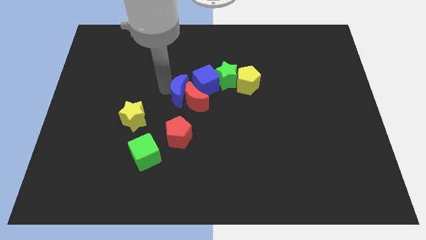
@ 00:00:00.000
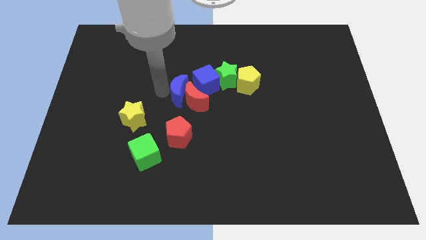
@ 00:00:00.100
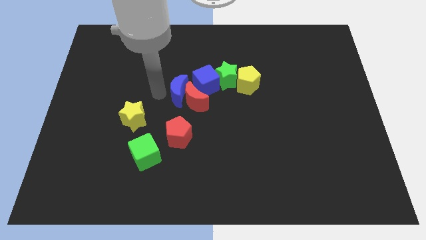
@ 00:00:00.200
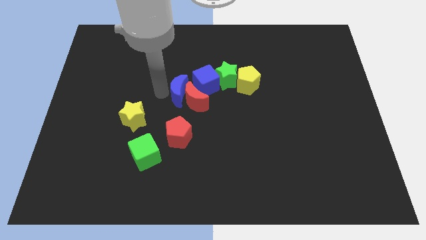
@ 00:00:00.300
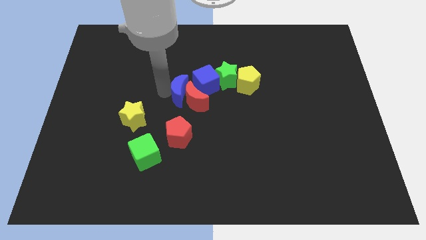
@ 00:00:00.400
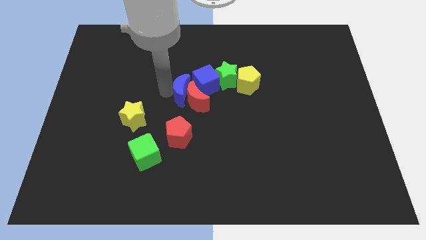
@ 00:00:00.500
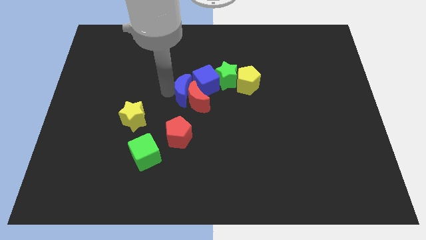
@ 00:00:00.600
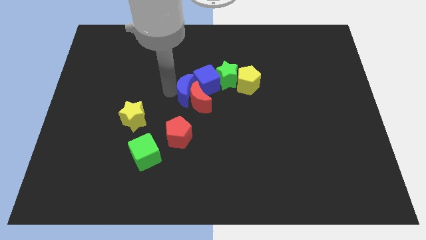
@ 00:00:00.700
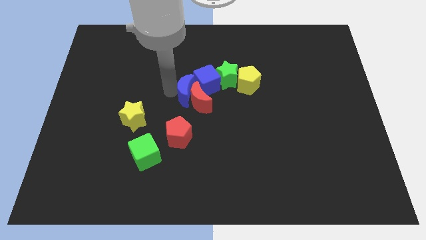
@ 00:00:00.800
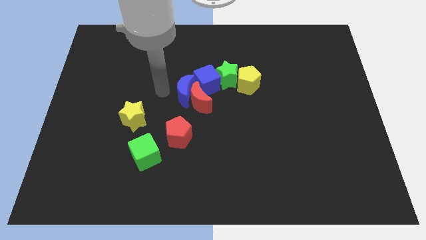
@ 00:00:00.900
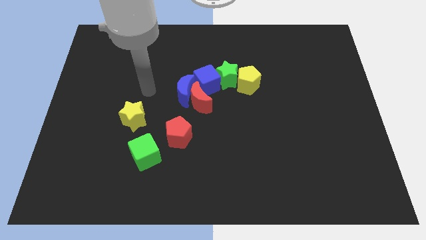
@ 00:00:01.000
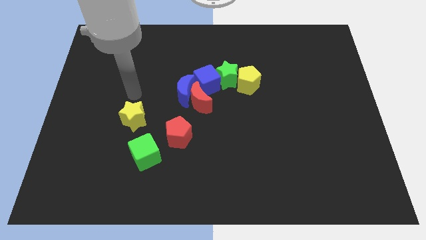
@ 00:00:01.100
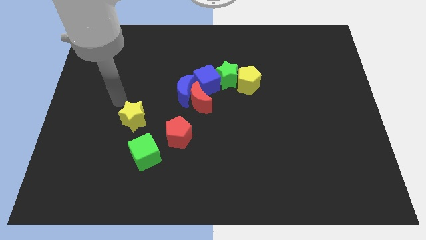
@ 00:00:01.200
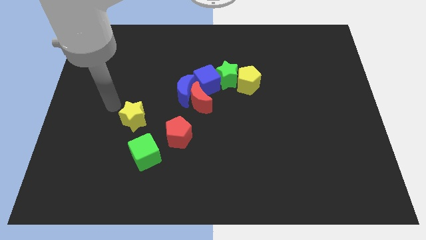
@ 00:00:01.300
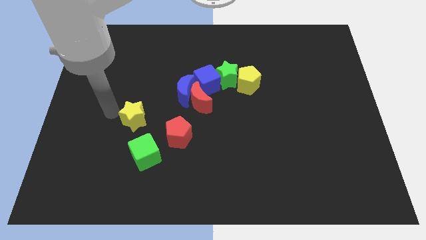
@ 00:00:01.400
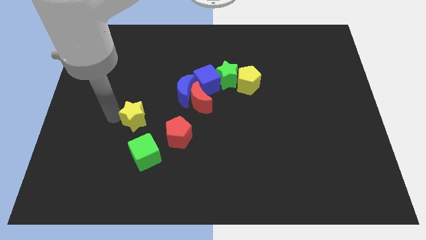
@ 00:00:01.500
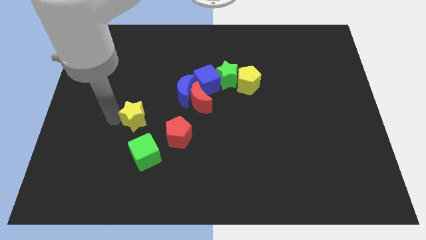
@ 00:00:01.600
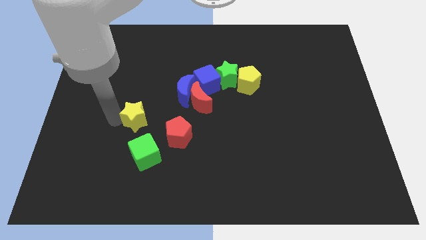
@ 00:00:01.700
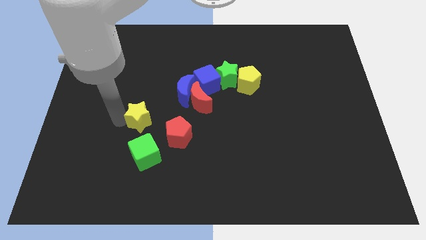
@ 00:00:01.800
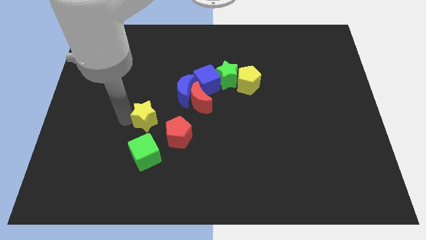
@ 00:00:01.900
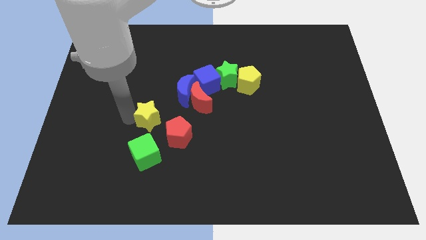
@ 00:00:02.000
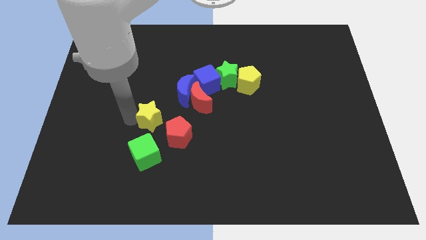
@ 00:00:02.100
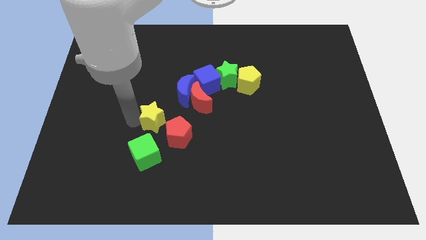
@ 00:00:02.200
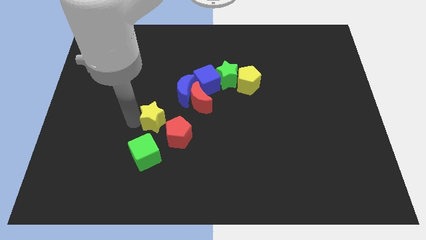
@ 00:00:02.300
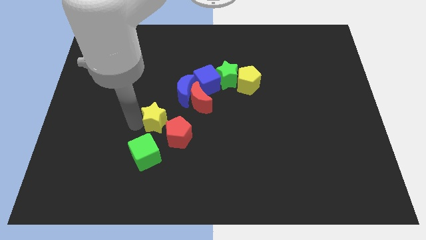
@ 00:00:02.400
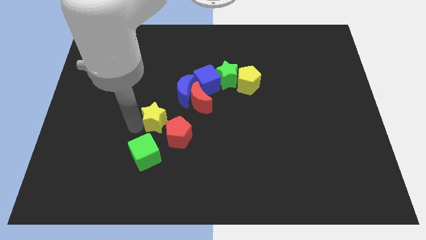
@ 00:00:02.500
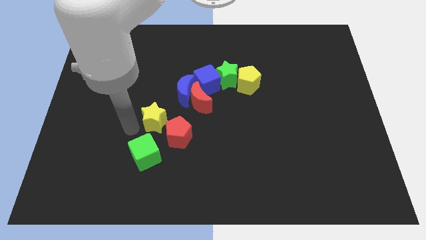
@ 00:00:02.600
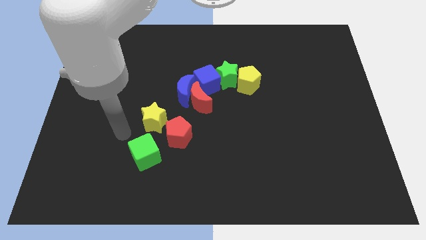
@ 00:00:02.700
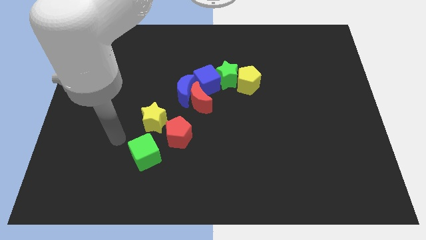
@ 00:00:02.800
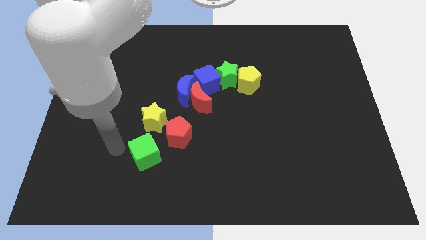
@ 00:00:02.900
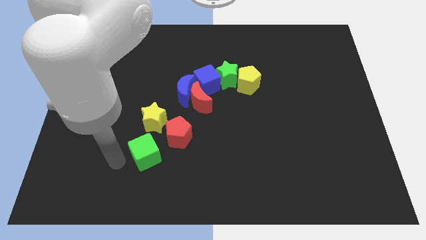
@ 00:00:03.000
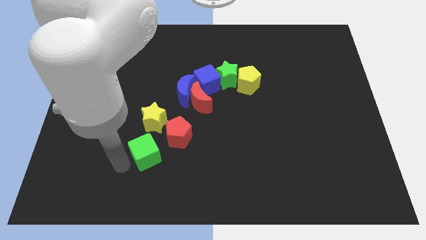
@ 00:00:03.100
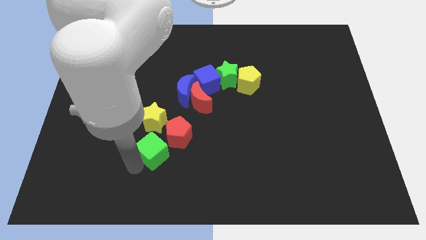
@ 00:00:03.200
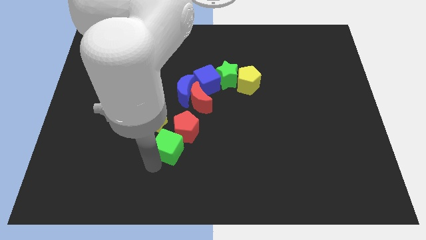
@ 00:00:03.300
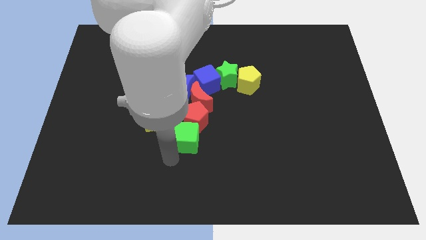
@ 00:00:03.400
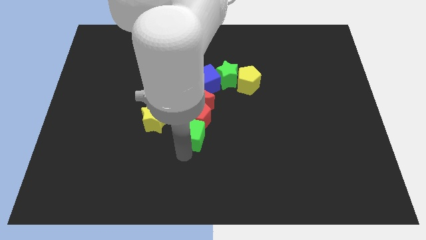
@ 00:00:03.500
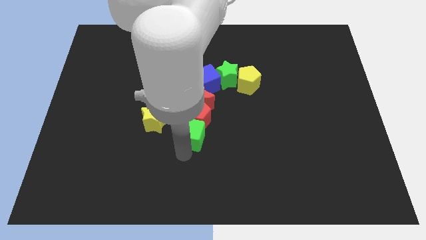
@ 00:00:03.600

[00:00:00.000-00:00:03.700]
push the green cube into the red pentagon

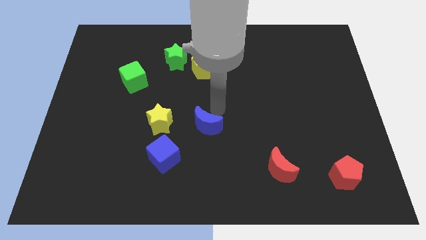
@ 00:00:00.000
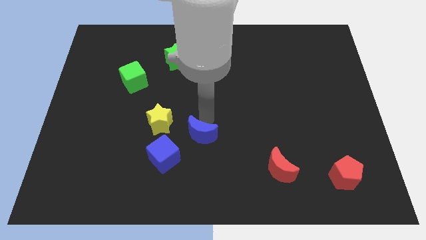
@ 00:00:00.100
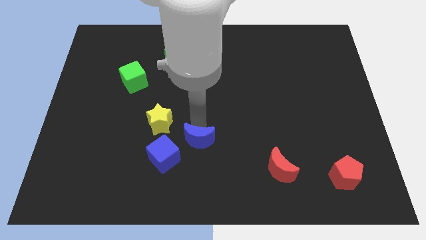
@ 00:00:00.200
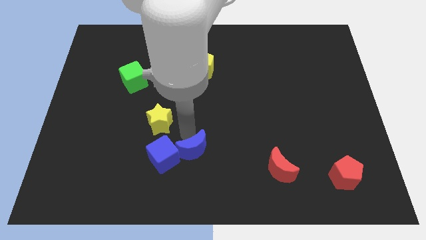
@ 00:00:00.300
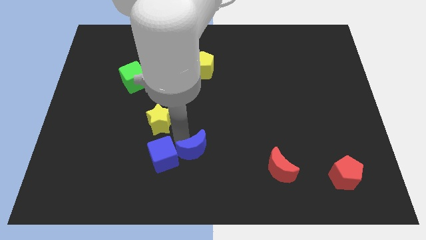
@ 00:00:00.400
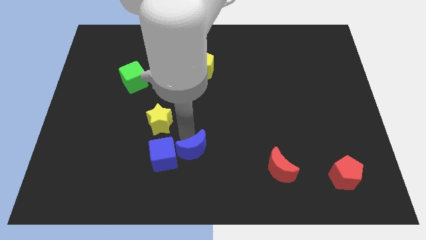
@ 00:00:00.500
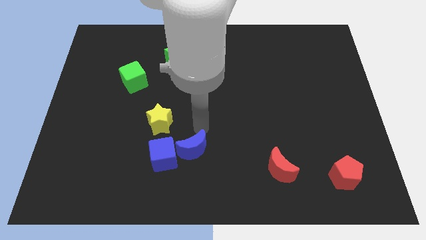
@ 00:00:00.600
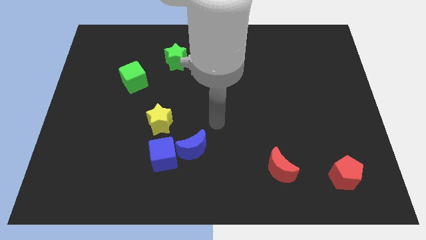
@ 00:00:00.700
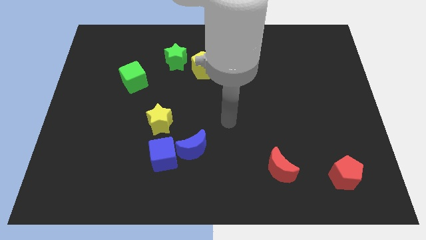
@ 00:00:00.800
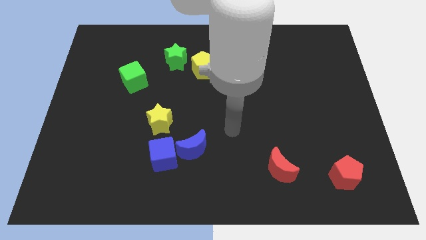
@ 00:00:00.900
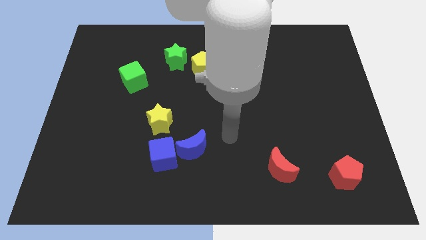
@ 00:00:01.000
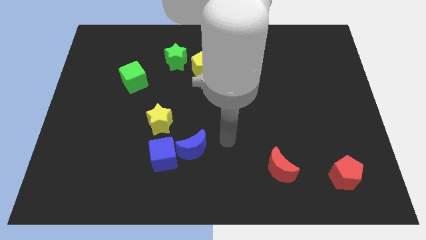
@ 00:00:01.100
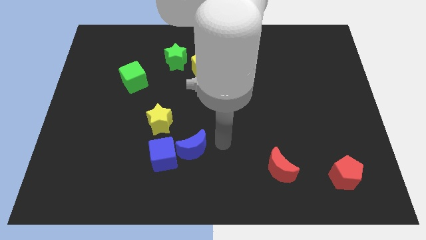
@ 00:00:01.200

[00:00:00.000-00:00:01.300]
make the blue crescent to touch the right side of the blue cube

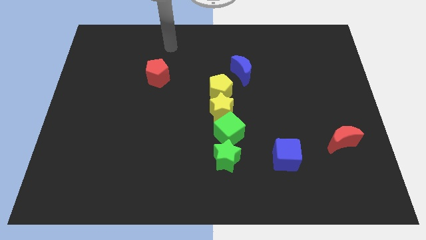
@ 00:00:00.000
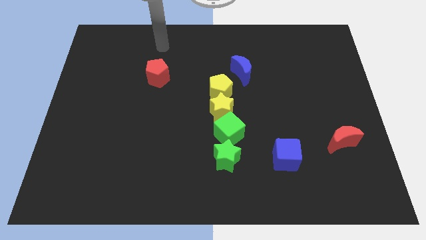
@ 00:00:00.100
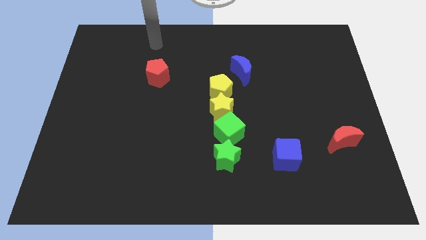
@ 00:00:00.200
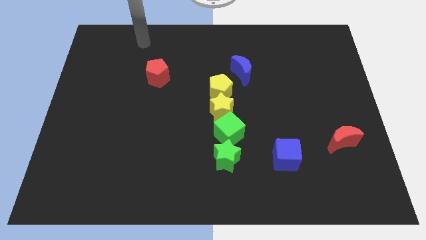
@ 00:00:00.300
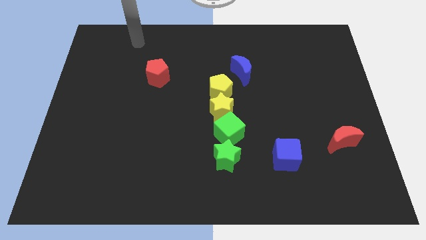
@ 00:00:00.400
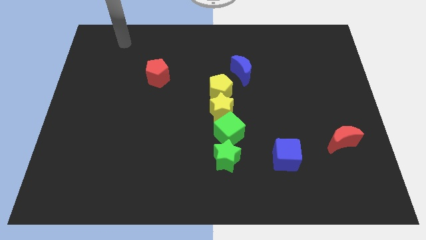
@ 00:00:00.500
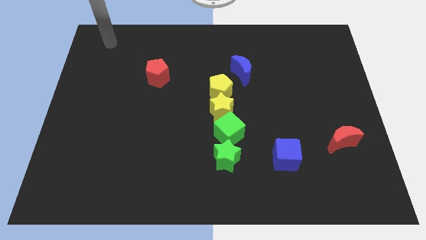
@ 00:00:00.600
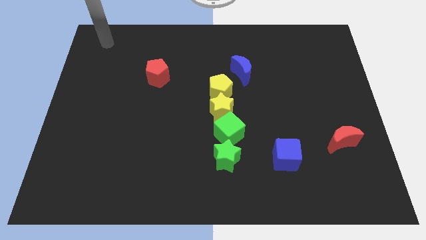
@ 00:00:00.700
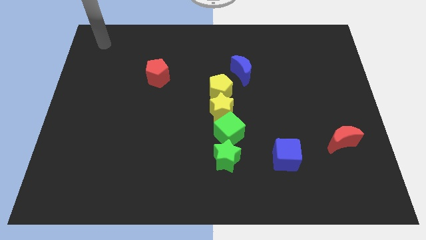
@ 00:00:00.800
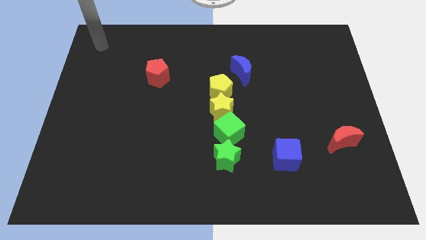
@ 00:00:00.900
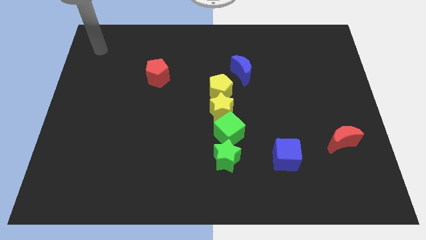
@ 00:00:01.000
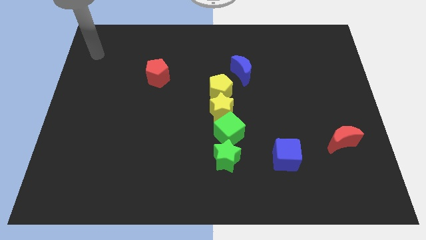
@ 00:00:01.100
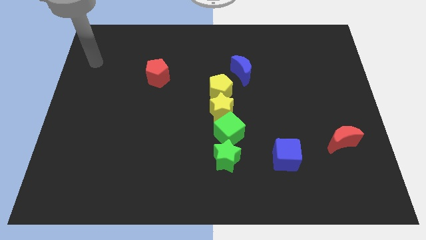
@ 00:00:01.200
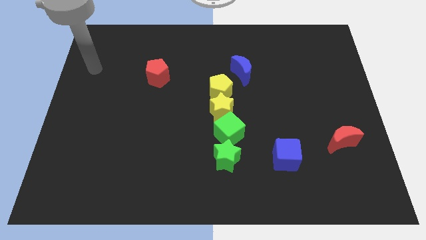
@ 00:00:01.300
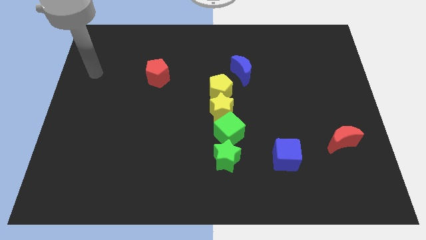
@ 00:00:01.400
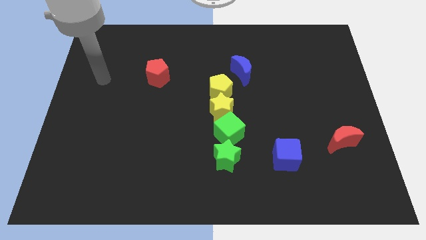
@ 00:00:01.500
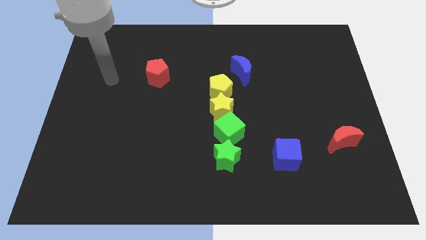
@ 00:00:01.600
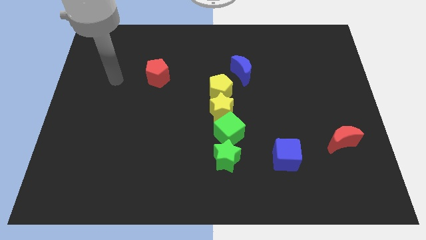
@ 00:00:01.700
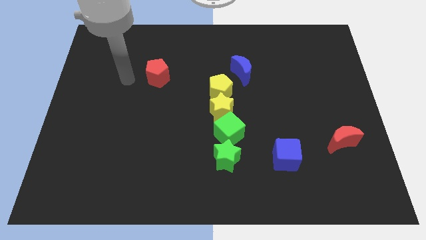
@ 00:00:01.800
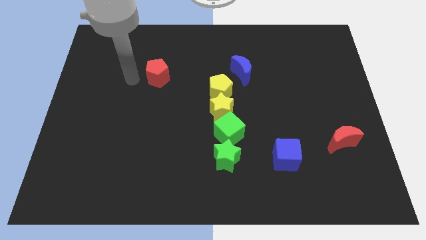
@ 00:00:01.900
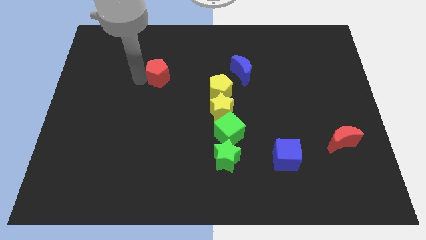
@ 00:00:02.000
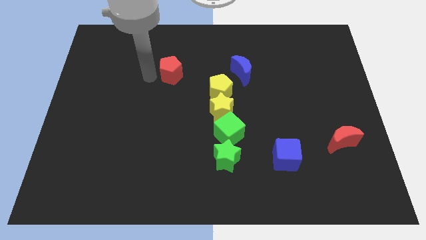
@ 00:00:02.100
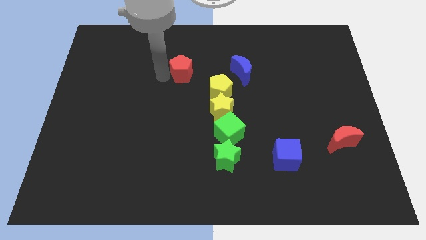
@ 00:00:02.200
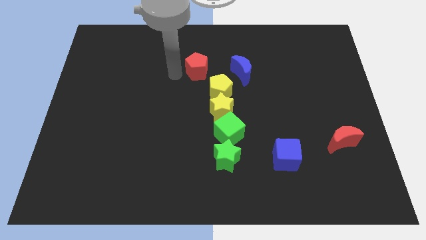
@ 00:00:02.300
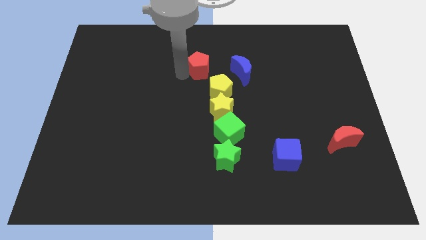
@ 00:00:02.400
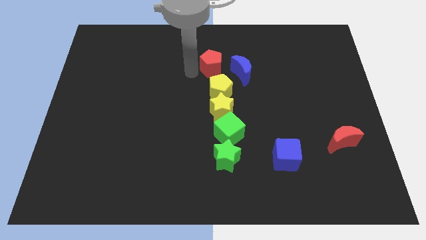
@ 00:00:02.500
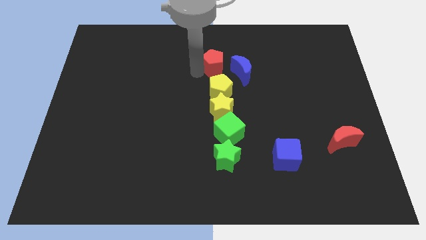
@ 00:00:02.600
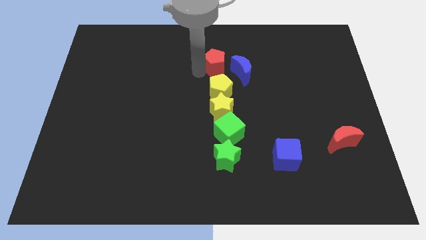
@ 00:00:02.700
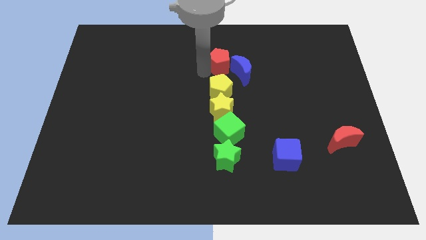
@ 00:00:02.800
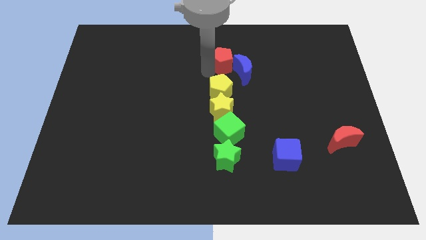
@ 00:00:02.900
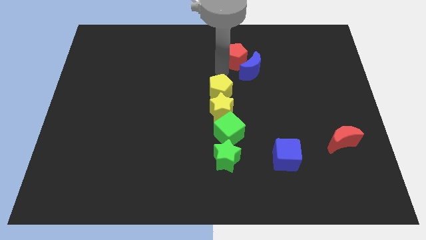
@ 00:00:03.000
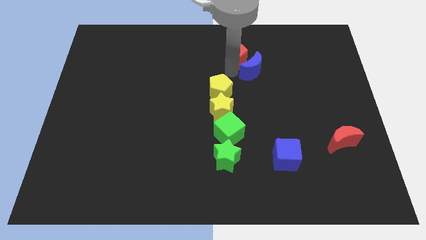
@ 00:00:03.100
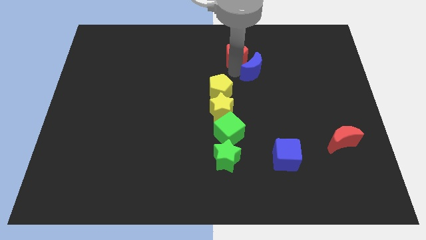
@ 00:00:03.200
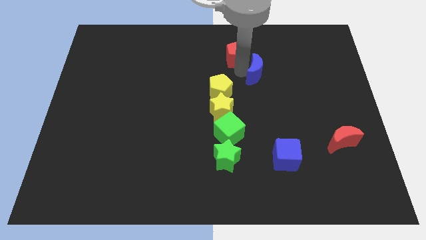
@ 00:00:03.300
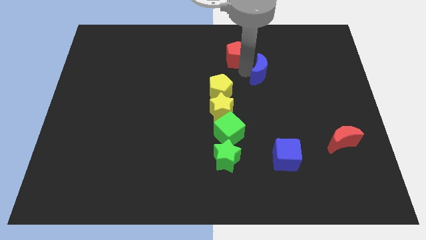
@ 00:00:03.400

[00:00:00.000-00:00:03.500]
push the red pentagon into the blue crescent

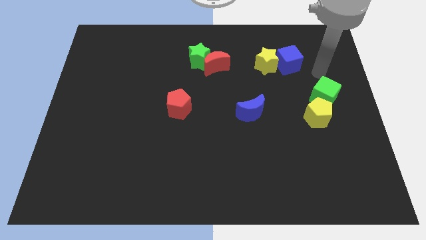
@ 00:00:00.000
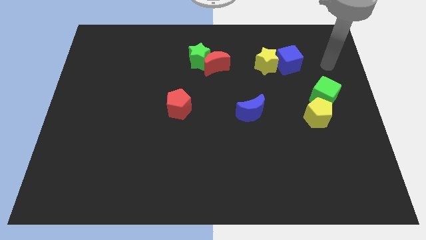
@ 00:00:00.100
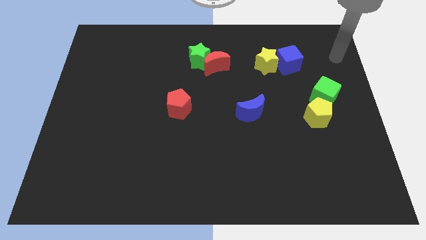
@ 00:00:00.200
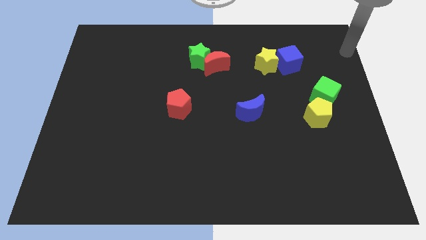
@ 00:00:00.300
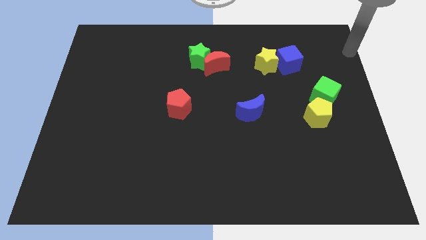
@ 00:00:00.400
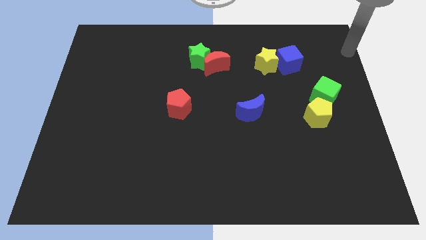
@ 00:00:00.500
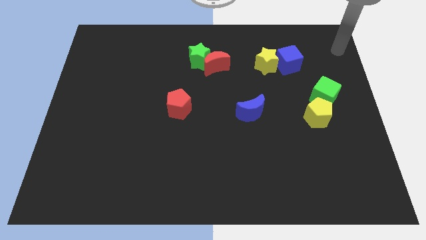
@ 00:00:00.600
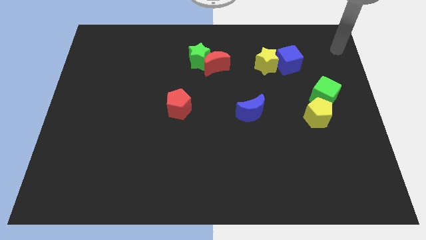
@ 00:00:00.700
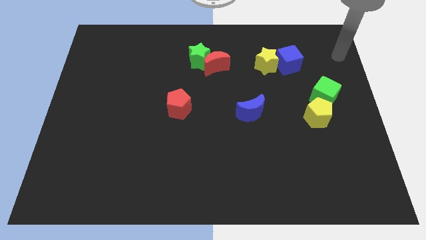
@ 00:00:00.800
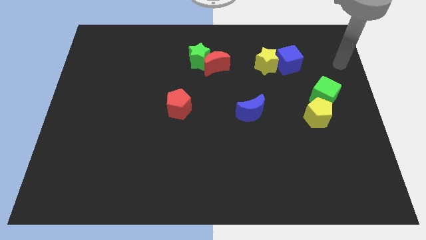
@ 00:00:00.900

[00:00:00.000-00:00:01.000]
move your arm to the top right corner of the board
